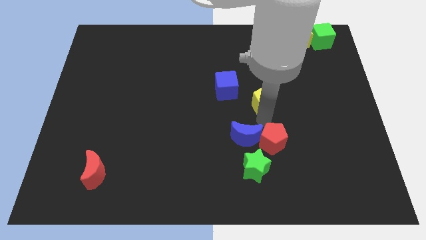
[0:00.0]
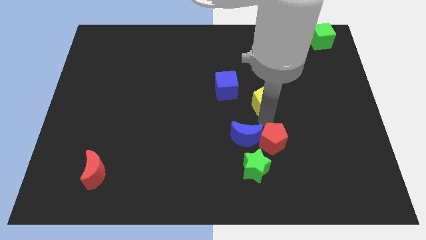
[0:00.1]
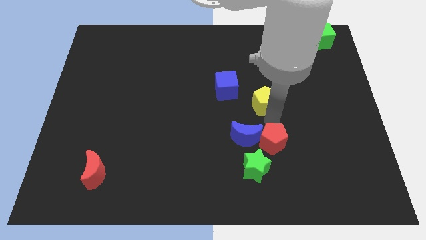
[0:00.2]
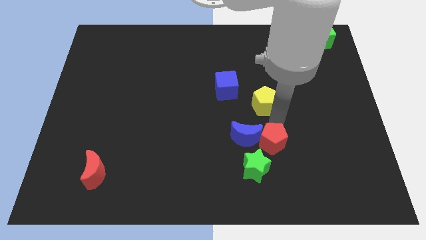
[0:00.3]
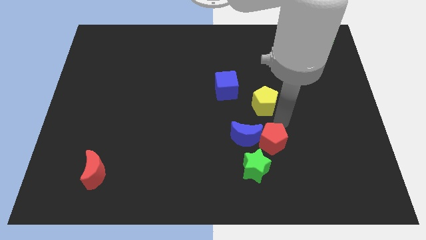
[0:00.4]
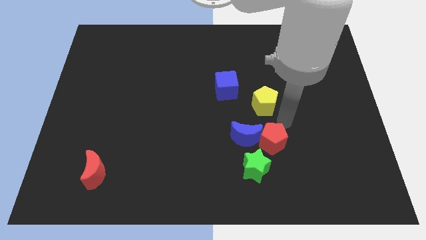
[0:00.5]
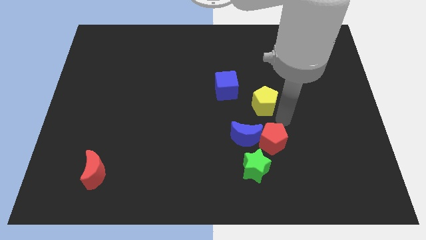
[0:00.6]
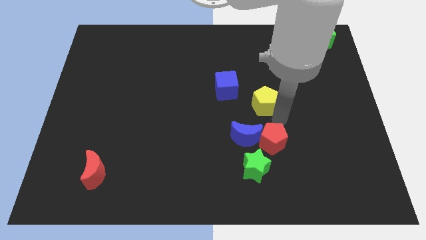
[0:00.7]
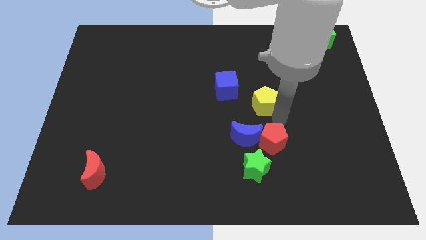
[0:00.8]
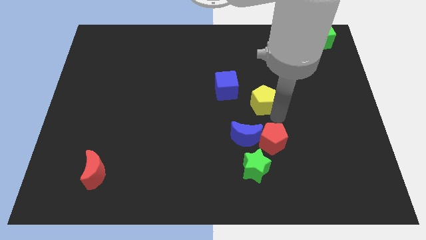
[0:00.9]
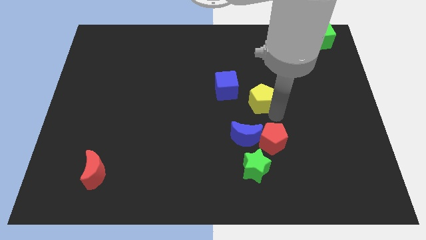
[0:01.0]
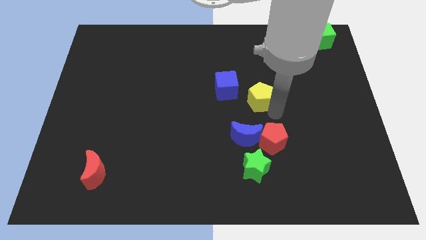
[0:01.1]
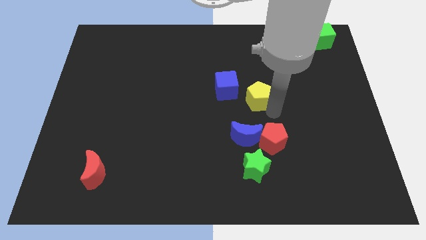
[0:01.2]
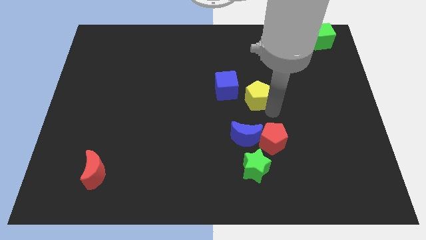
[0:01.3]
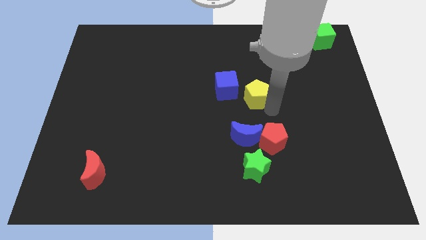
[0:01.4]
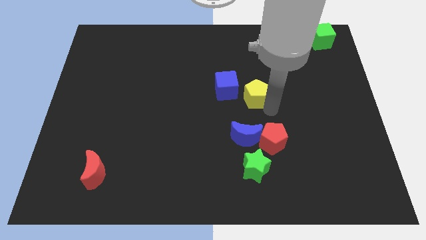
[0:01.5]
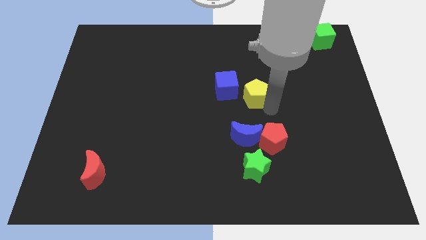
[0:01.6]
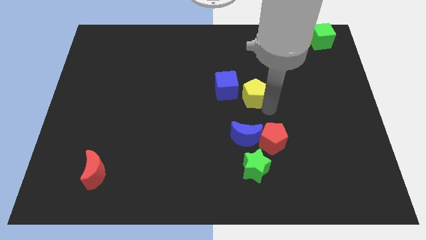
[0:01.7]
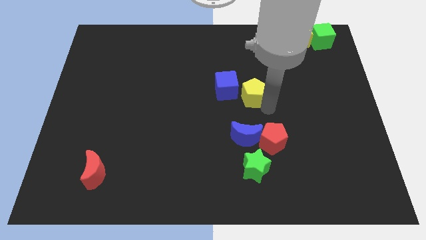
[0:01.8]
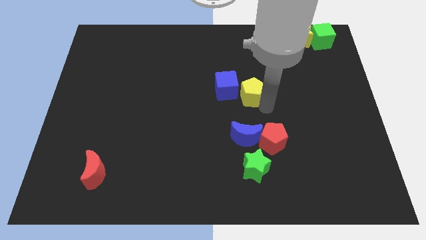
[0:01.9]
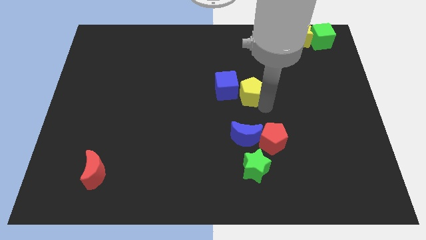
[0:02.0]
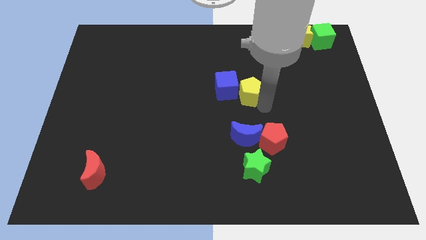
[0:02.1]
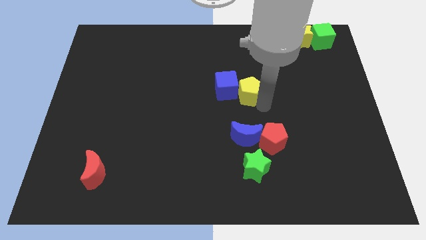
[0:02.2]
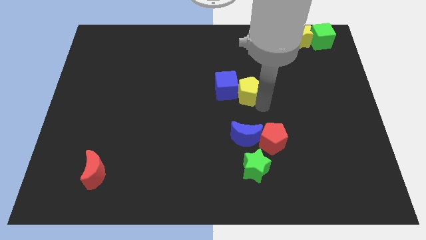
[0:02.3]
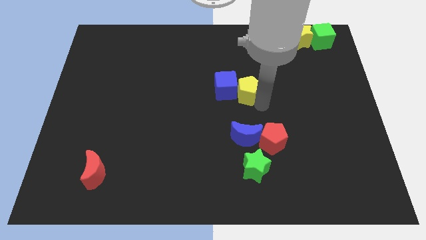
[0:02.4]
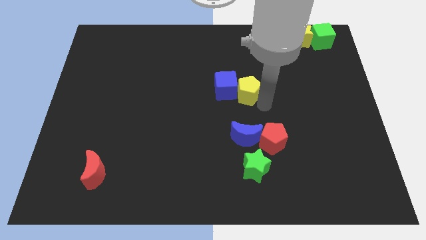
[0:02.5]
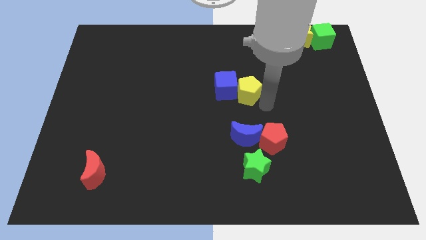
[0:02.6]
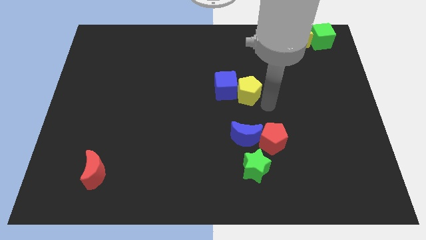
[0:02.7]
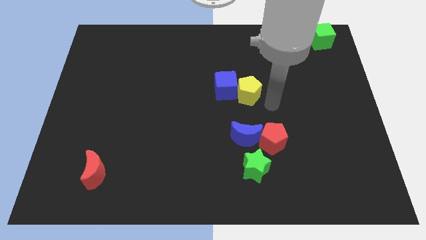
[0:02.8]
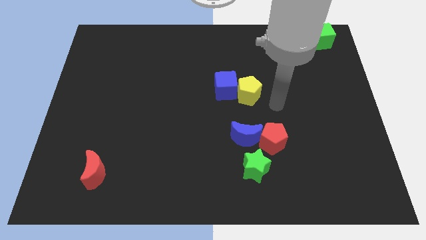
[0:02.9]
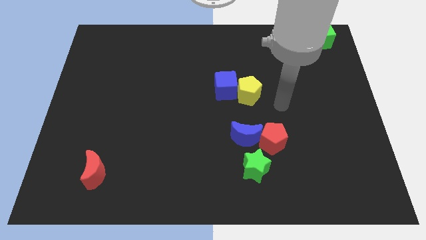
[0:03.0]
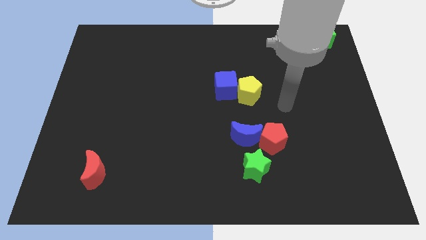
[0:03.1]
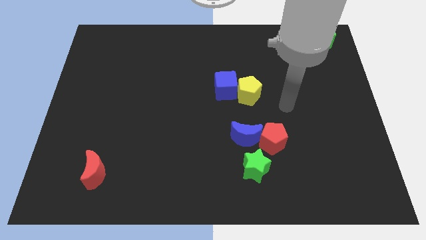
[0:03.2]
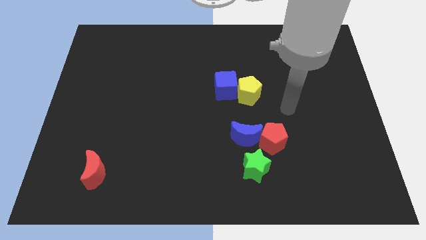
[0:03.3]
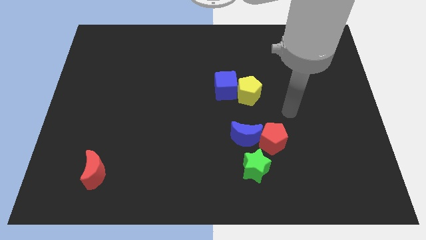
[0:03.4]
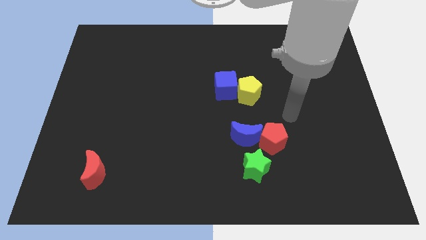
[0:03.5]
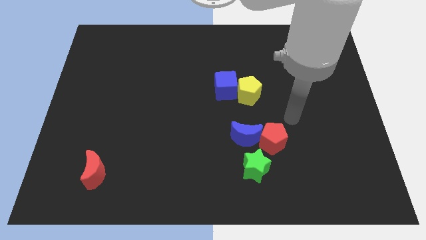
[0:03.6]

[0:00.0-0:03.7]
push yellow pentagon into the blue cube

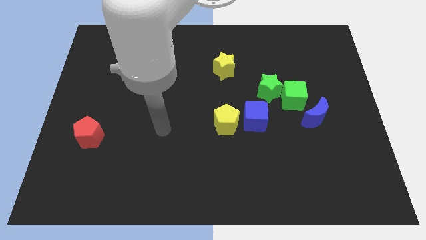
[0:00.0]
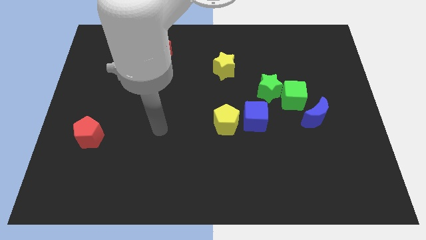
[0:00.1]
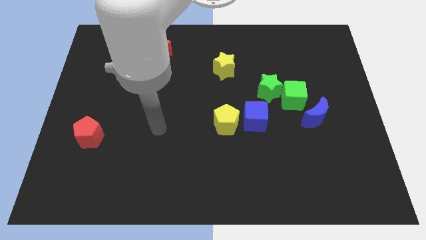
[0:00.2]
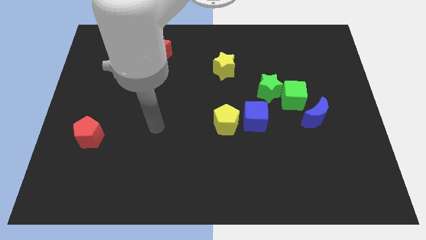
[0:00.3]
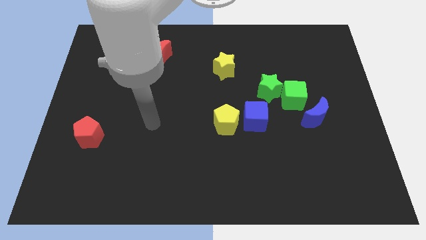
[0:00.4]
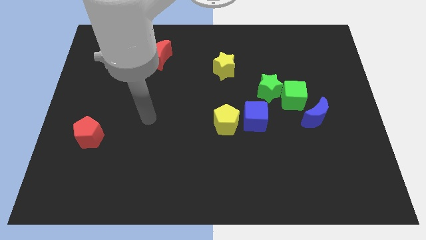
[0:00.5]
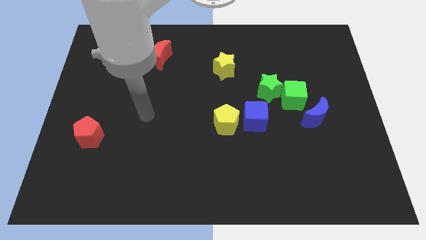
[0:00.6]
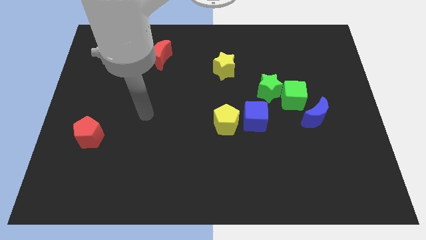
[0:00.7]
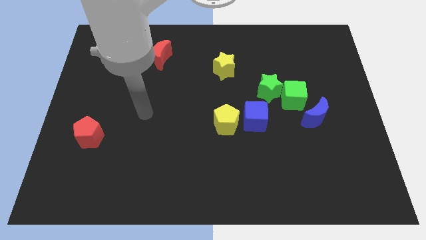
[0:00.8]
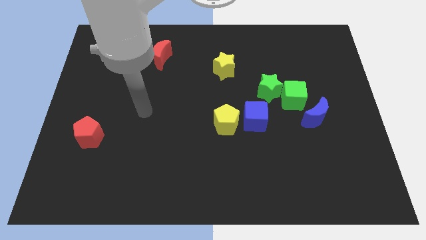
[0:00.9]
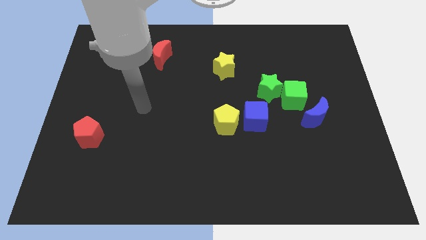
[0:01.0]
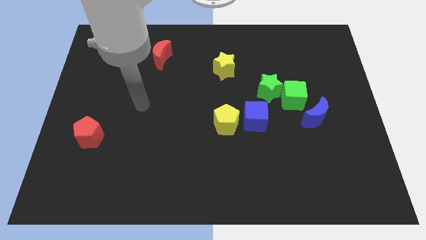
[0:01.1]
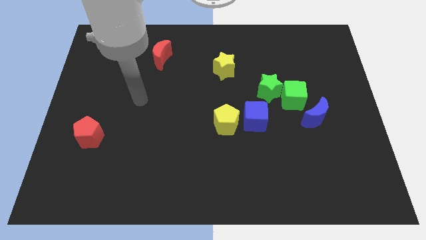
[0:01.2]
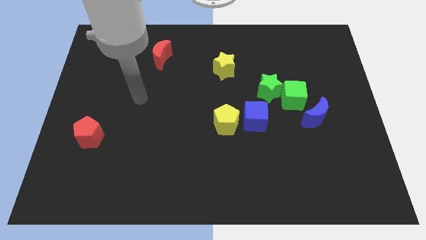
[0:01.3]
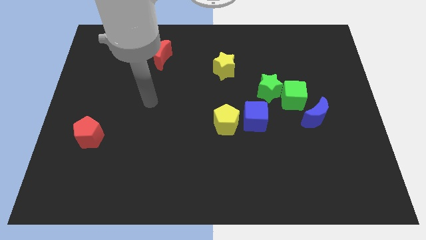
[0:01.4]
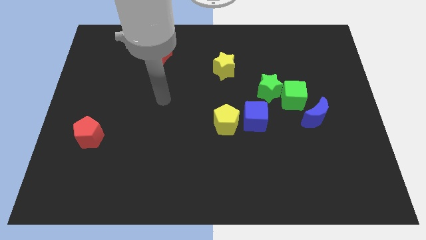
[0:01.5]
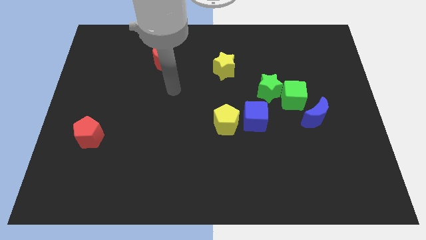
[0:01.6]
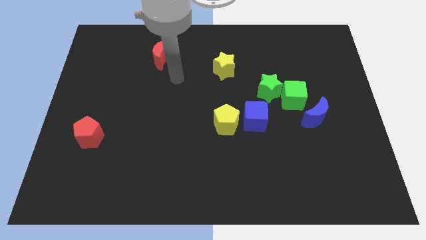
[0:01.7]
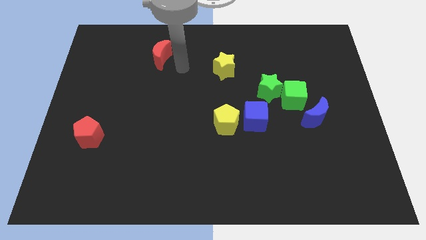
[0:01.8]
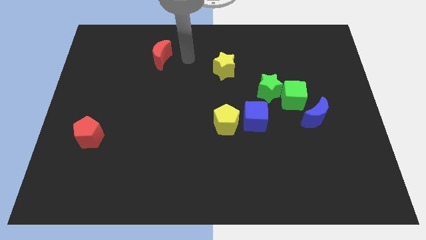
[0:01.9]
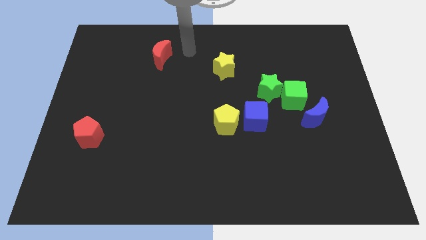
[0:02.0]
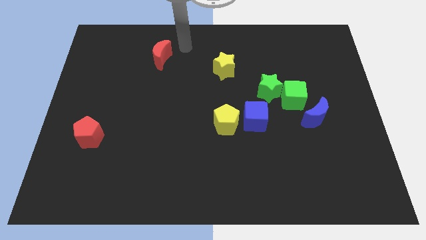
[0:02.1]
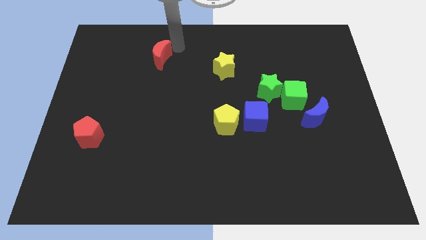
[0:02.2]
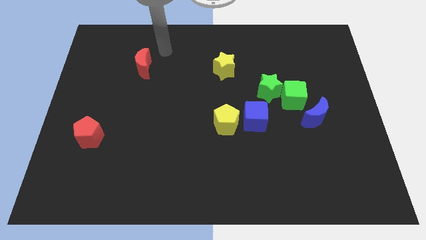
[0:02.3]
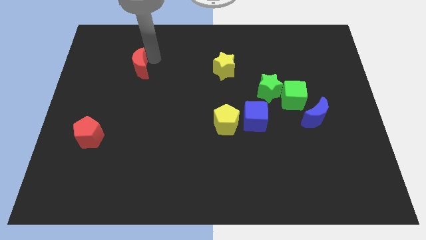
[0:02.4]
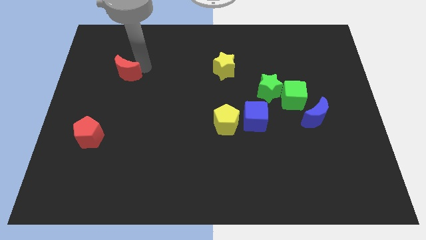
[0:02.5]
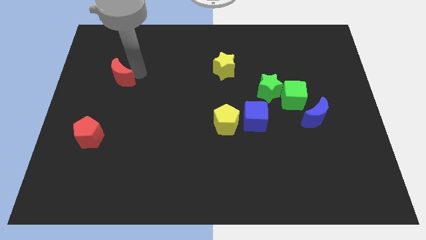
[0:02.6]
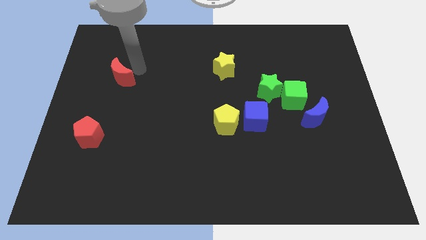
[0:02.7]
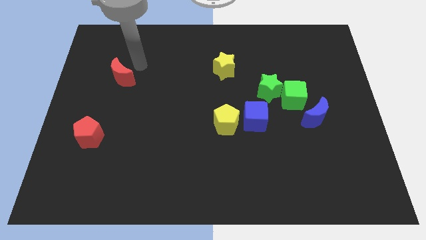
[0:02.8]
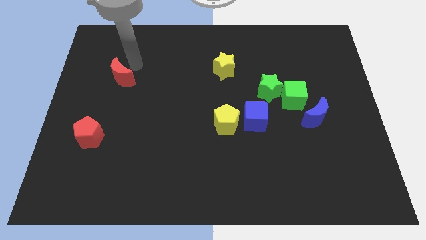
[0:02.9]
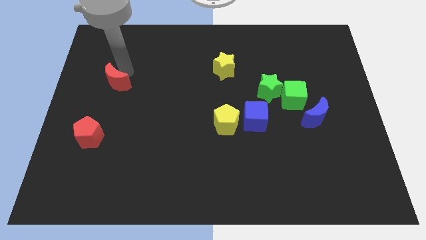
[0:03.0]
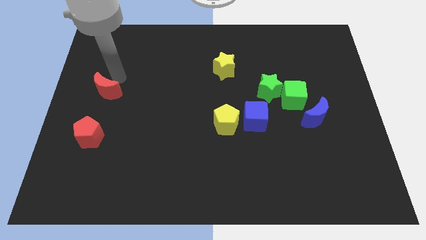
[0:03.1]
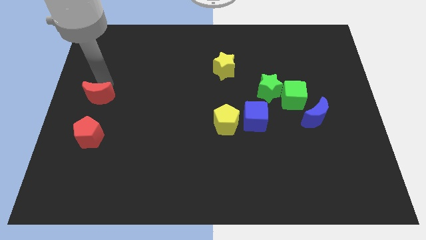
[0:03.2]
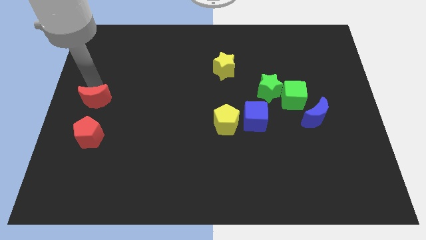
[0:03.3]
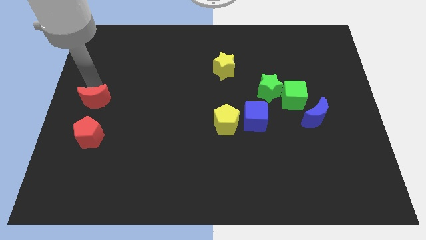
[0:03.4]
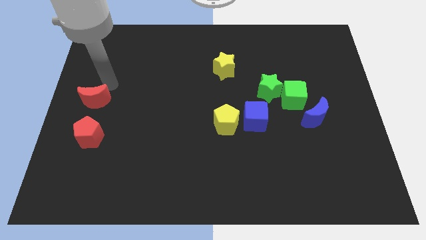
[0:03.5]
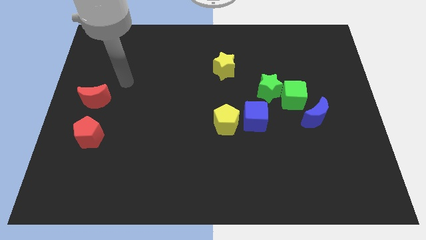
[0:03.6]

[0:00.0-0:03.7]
place the red crescent above the red pentagon

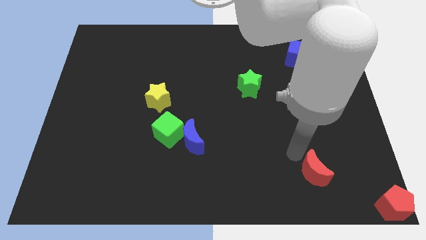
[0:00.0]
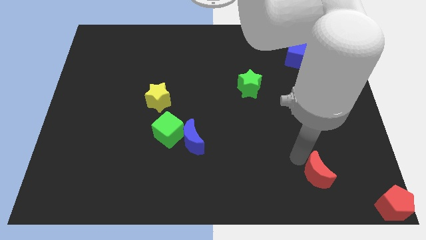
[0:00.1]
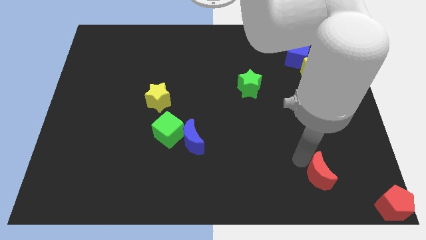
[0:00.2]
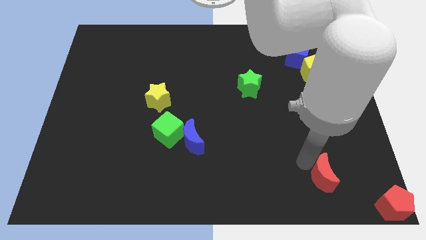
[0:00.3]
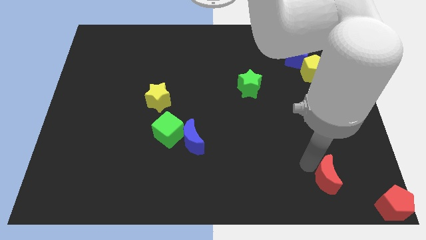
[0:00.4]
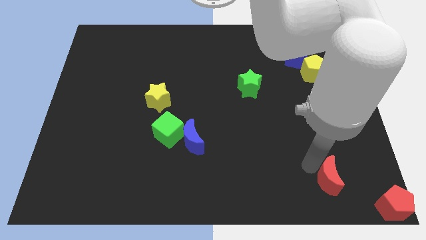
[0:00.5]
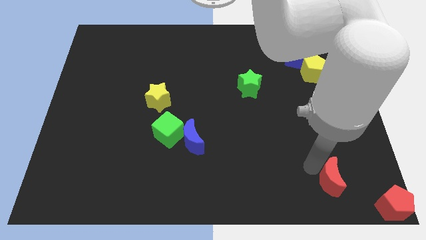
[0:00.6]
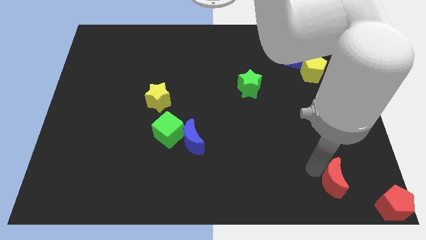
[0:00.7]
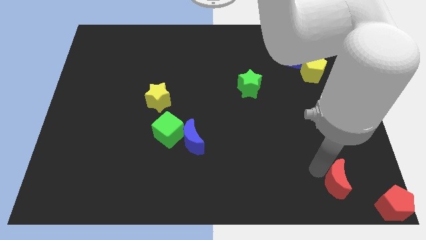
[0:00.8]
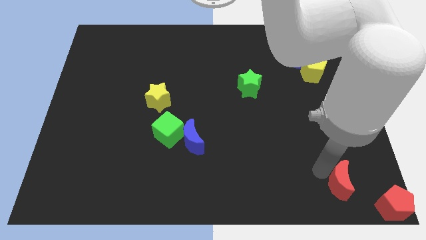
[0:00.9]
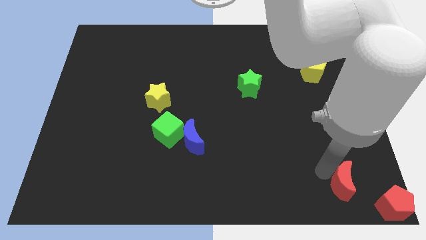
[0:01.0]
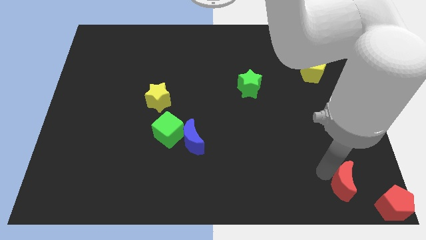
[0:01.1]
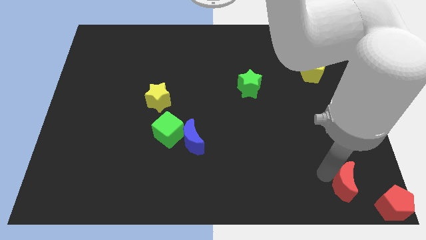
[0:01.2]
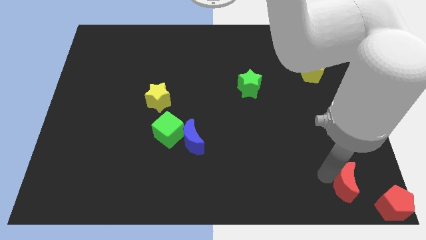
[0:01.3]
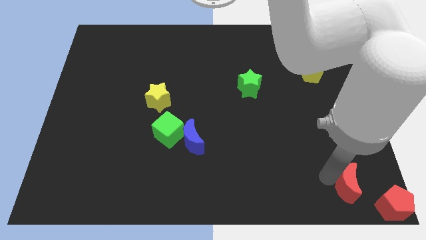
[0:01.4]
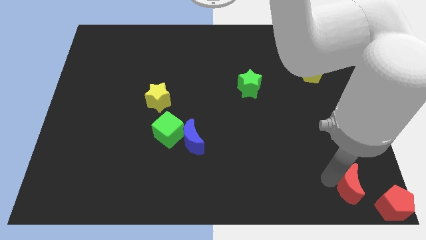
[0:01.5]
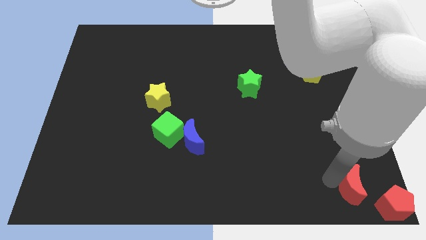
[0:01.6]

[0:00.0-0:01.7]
place the red moon diagonally to the red pentagon

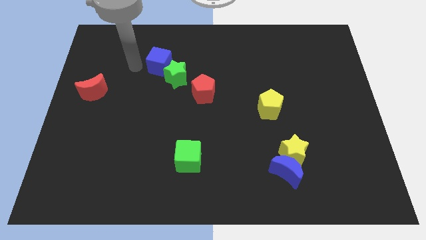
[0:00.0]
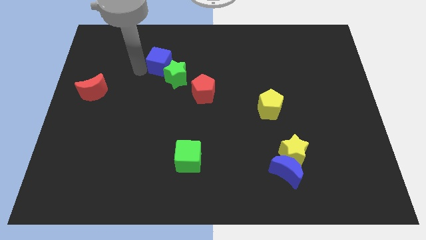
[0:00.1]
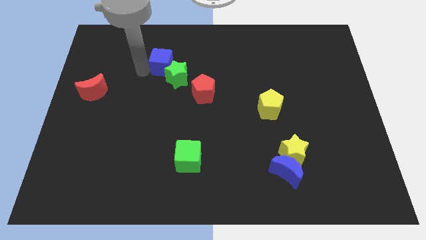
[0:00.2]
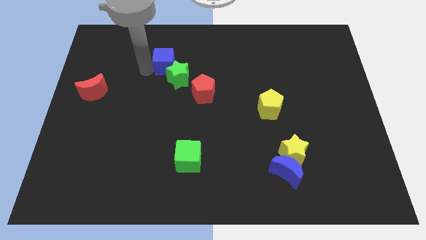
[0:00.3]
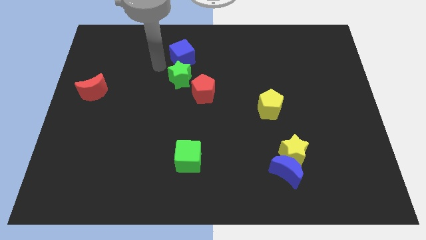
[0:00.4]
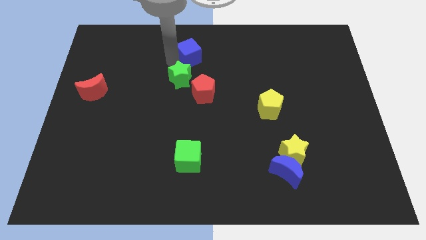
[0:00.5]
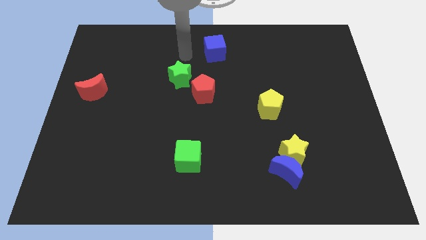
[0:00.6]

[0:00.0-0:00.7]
place blue cube to the top right of green star
